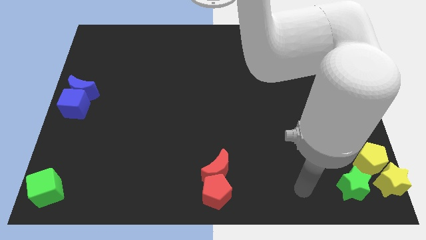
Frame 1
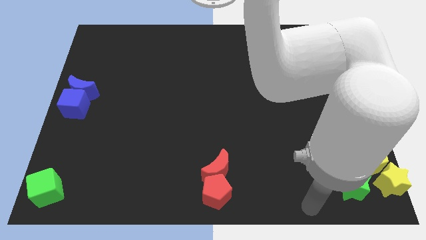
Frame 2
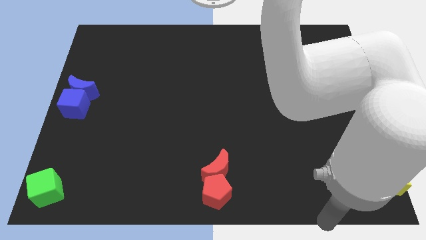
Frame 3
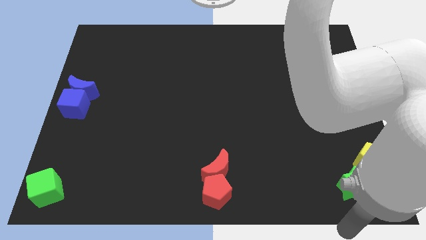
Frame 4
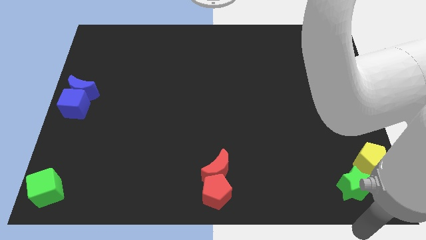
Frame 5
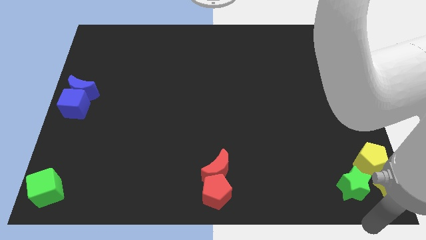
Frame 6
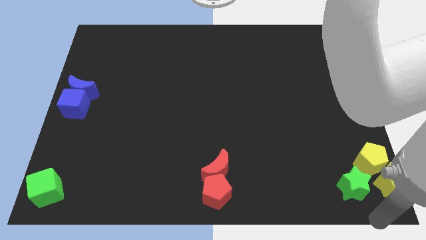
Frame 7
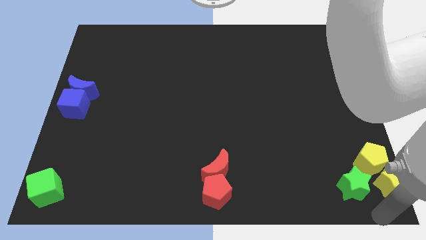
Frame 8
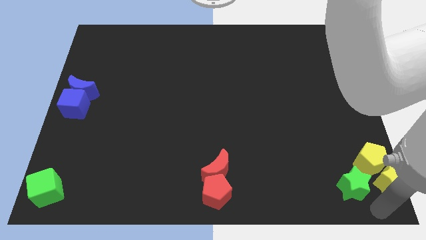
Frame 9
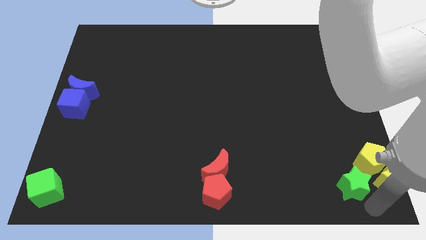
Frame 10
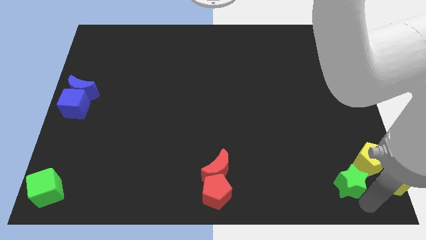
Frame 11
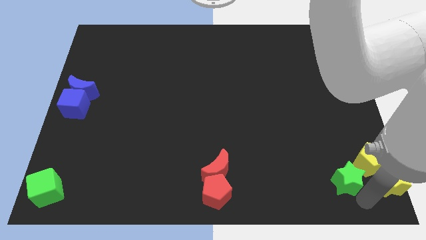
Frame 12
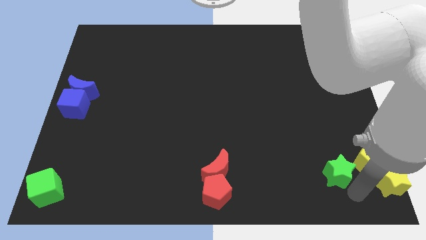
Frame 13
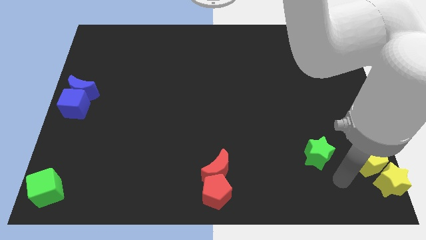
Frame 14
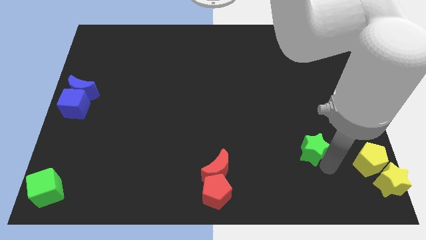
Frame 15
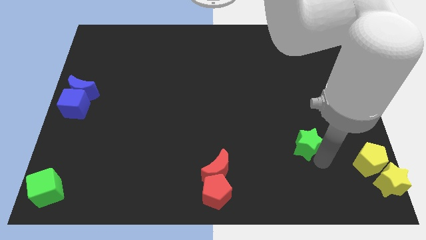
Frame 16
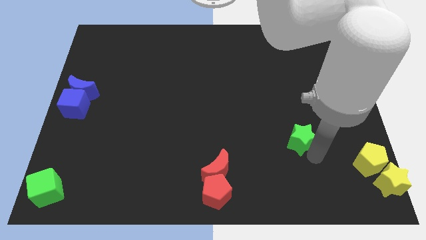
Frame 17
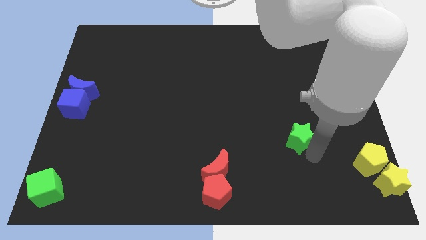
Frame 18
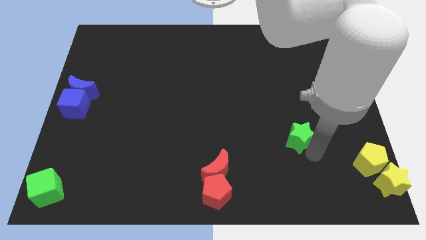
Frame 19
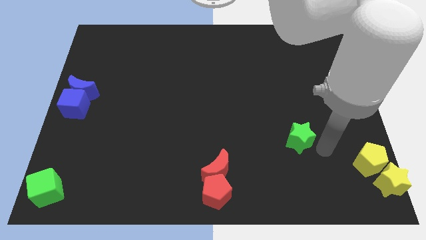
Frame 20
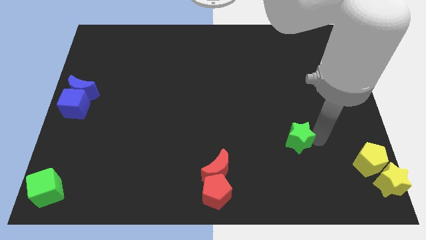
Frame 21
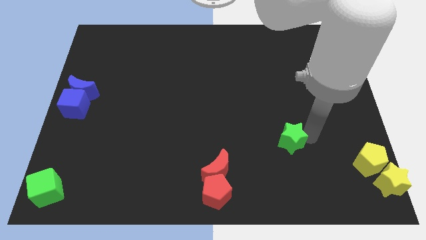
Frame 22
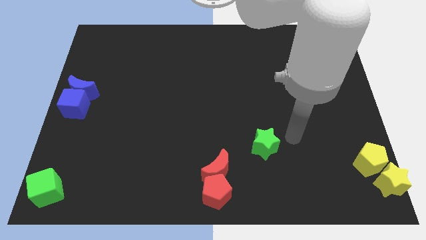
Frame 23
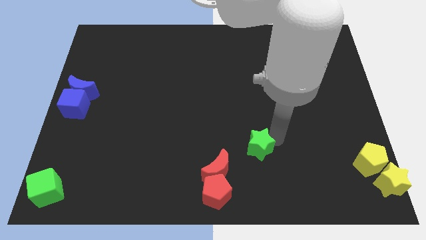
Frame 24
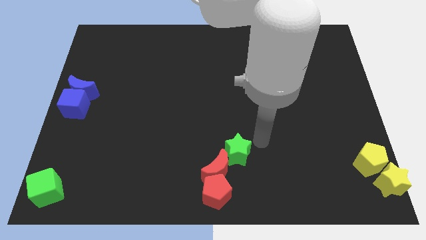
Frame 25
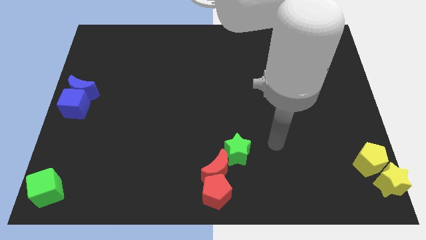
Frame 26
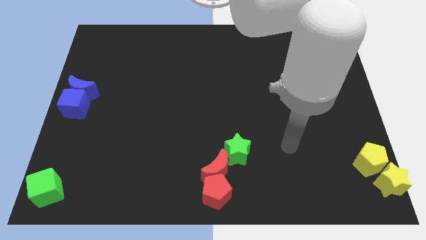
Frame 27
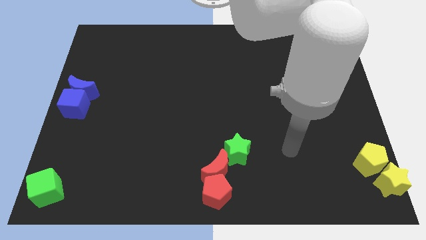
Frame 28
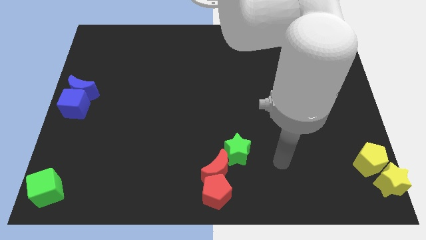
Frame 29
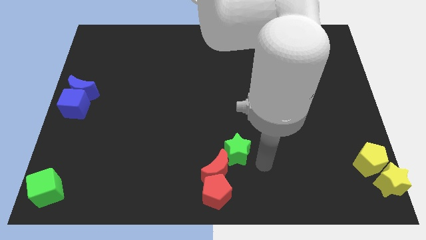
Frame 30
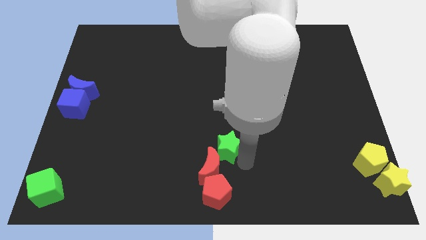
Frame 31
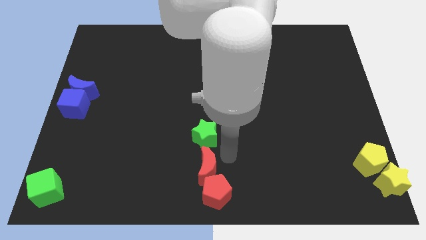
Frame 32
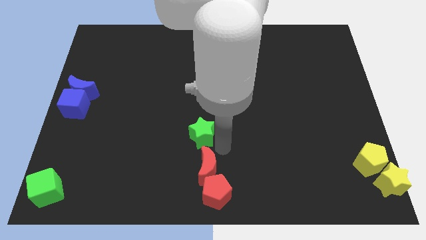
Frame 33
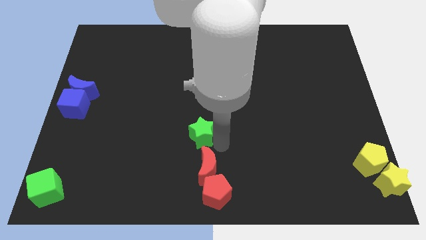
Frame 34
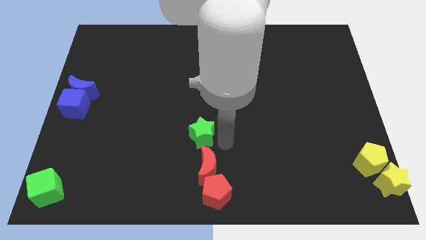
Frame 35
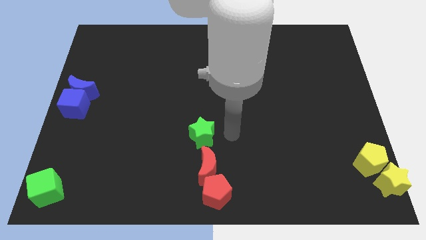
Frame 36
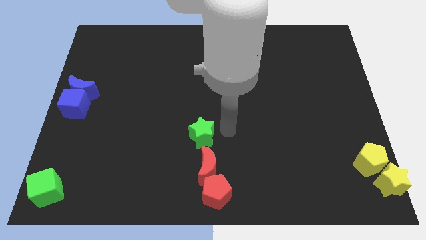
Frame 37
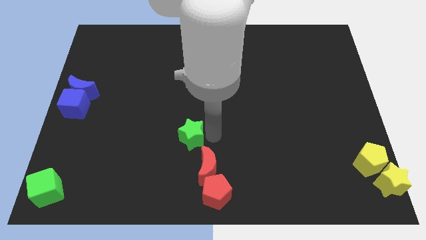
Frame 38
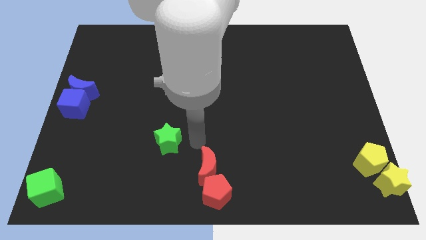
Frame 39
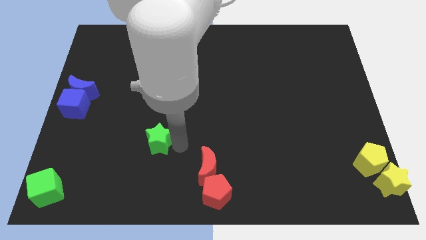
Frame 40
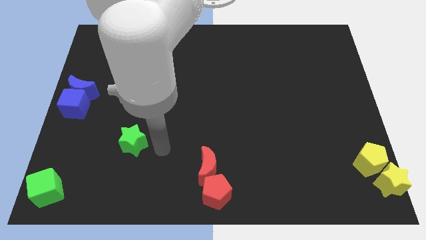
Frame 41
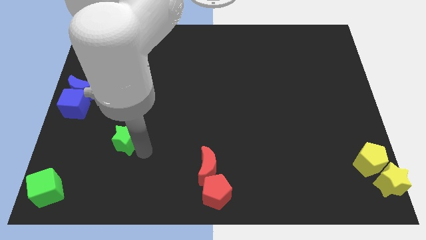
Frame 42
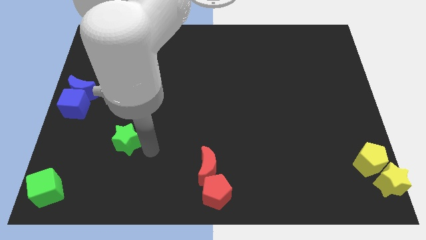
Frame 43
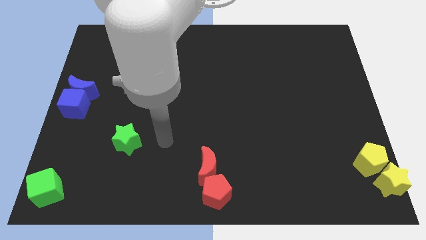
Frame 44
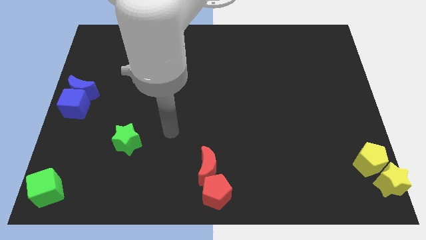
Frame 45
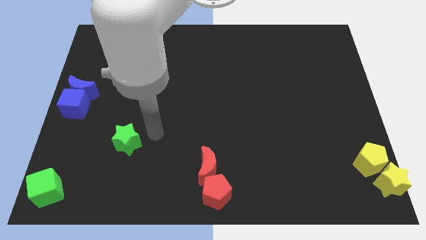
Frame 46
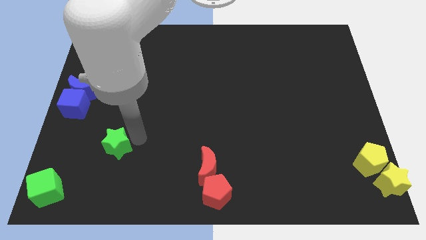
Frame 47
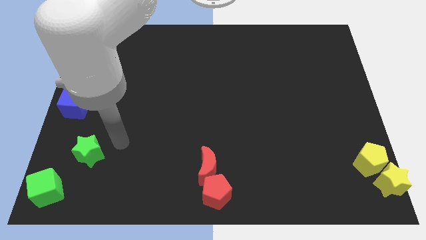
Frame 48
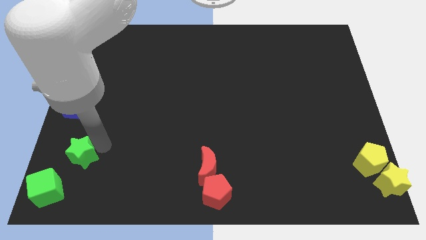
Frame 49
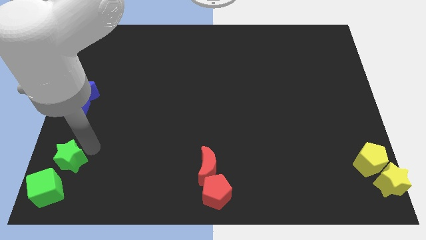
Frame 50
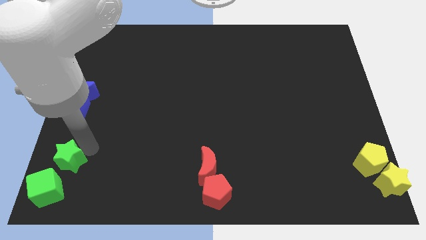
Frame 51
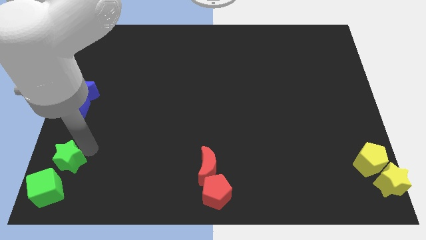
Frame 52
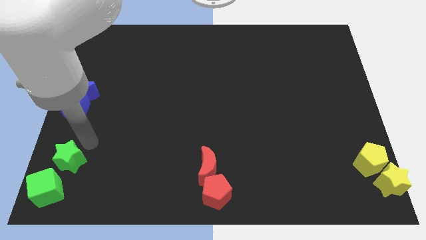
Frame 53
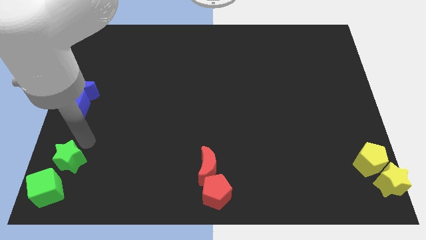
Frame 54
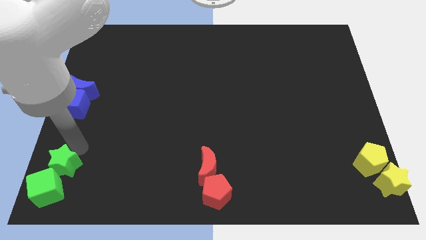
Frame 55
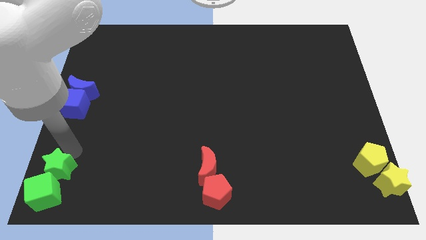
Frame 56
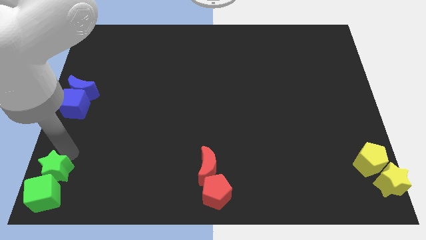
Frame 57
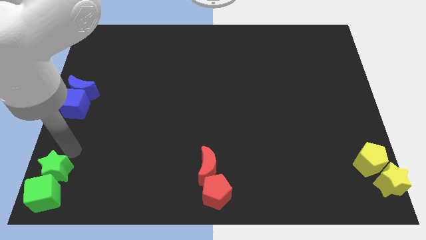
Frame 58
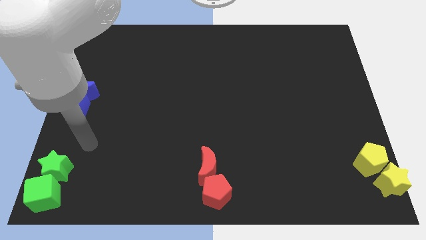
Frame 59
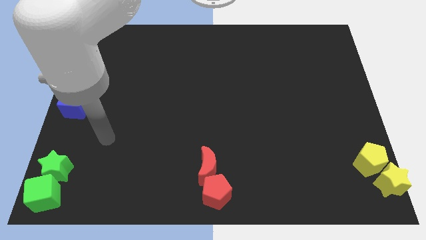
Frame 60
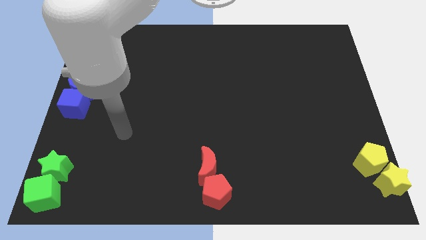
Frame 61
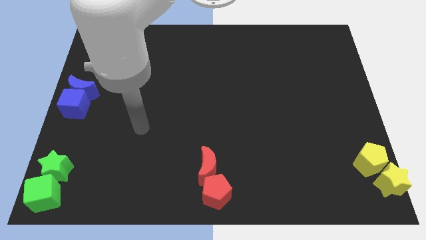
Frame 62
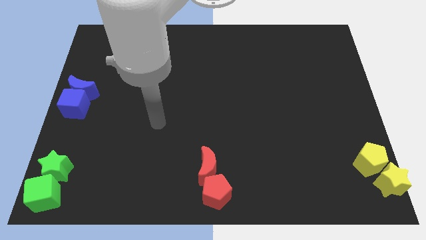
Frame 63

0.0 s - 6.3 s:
place the green star at the top of the green cube

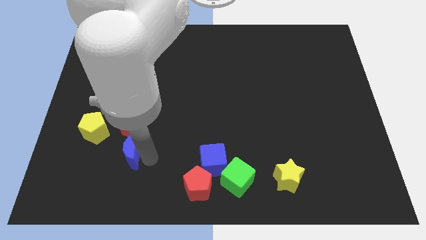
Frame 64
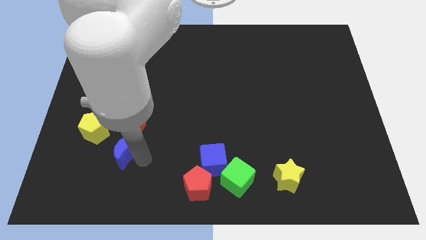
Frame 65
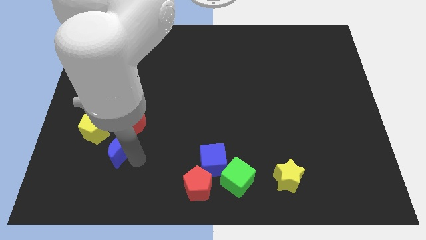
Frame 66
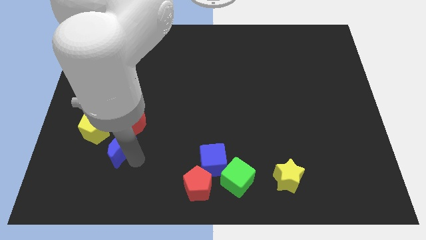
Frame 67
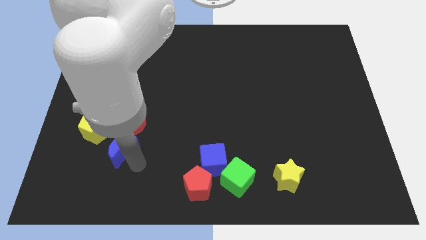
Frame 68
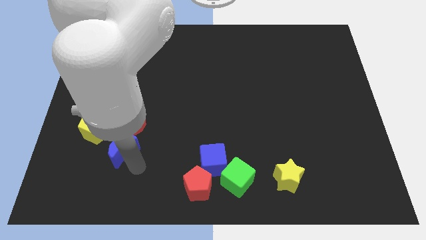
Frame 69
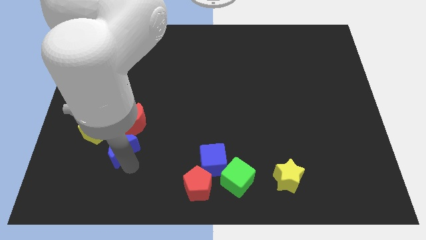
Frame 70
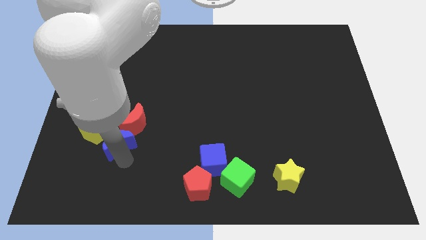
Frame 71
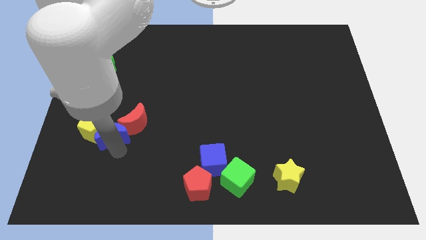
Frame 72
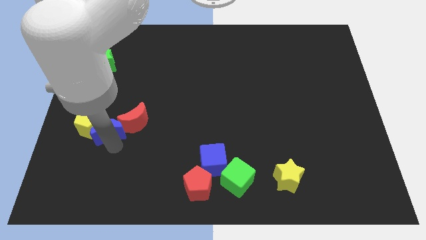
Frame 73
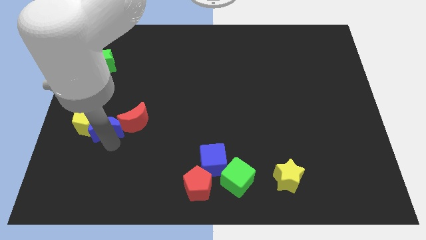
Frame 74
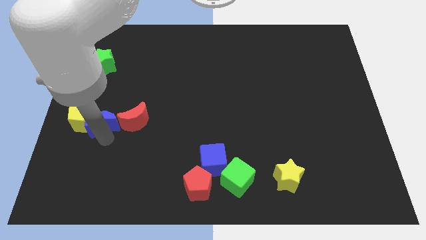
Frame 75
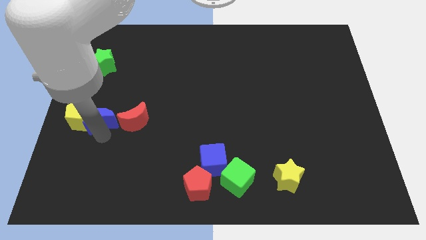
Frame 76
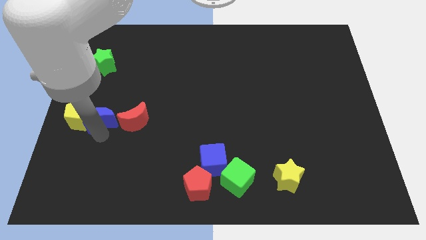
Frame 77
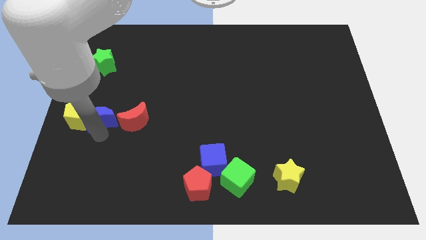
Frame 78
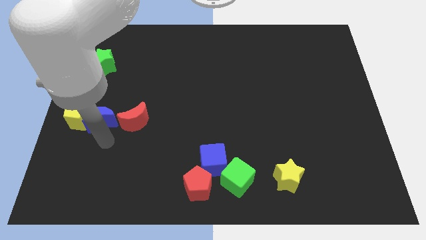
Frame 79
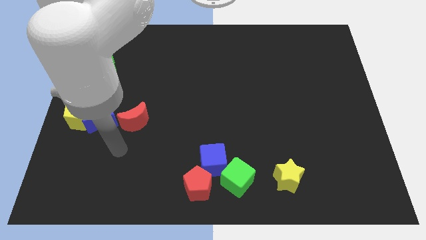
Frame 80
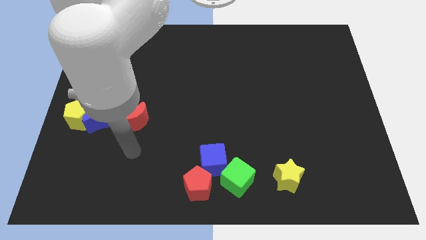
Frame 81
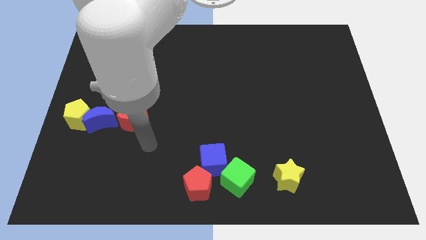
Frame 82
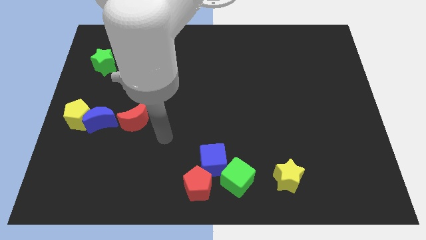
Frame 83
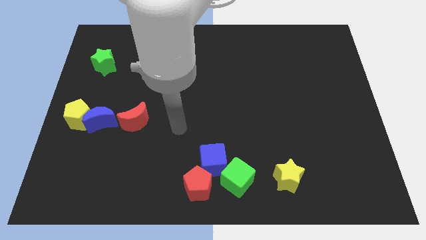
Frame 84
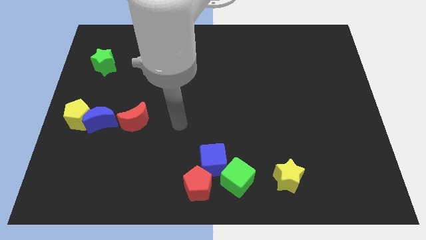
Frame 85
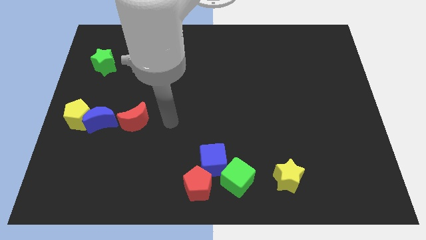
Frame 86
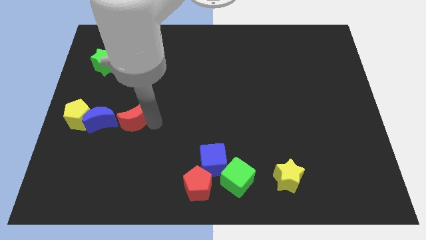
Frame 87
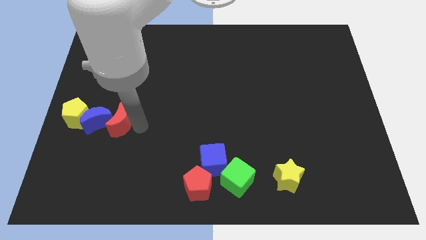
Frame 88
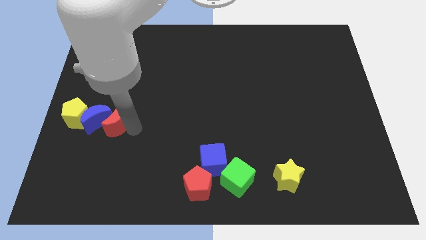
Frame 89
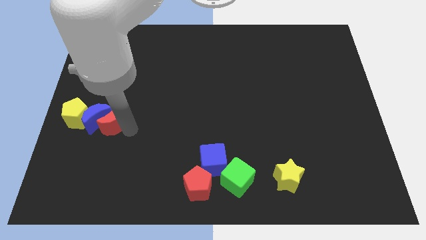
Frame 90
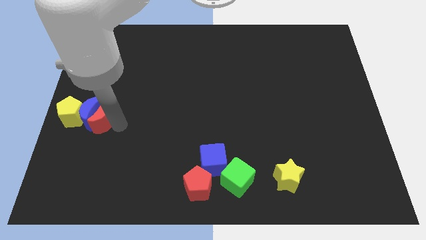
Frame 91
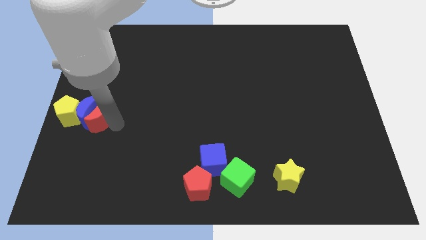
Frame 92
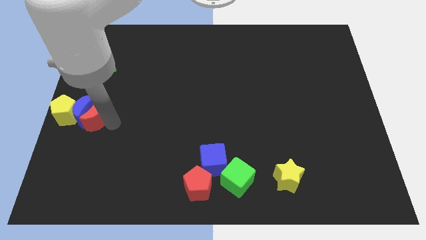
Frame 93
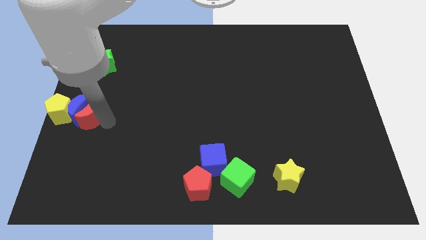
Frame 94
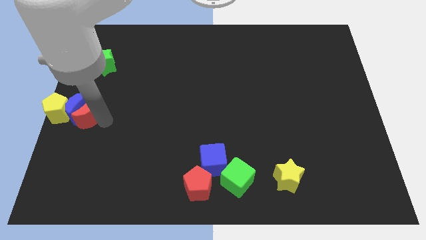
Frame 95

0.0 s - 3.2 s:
push blue moon along with red moon into yellow pentagon
